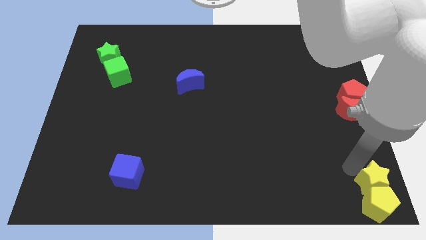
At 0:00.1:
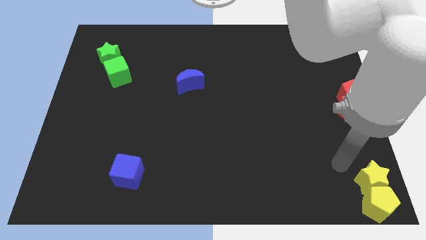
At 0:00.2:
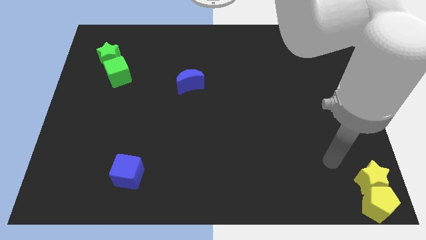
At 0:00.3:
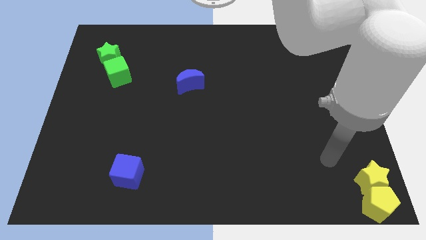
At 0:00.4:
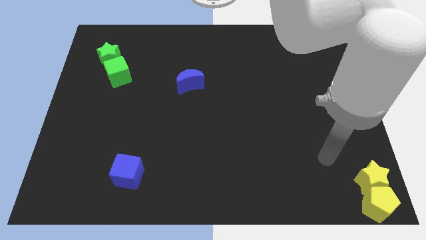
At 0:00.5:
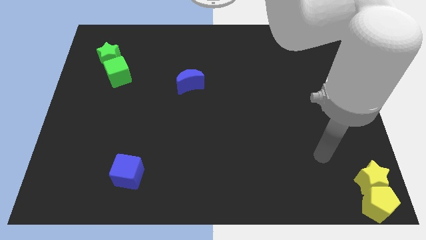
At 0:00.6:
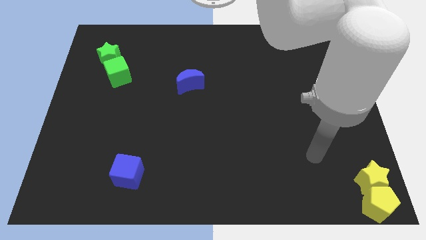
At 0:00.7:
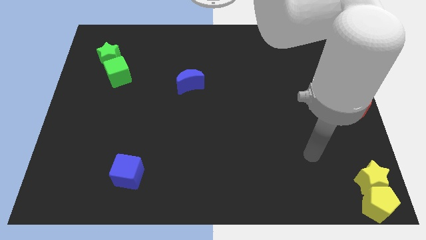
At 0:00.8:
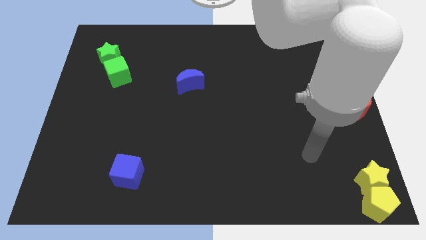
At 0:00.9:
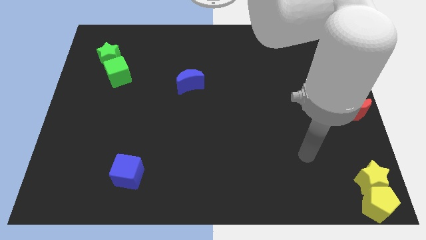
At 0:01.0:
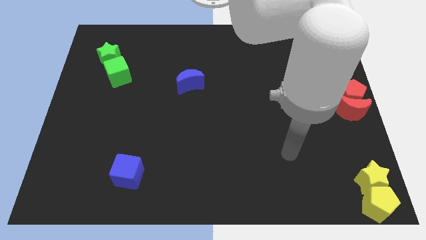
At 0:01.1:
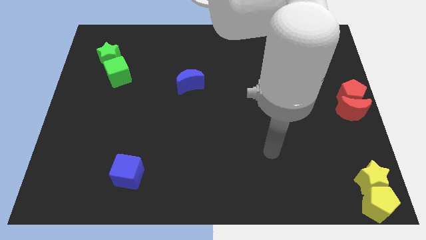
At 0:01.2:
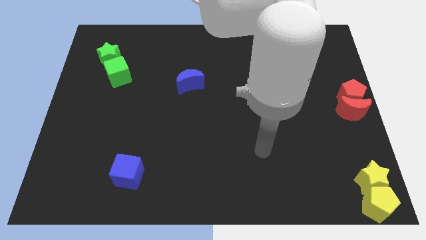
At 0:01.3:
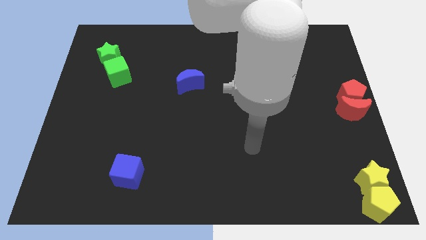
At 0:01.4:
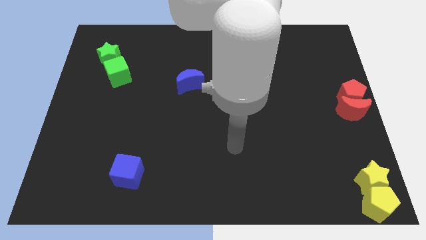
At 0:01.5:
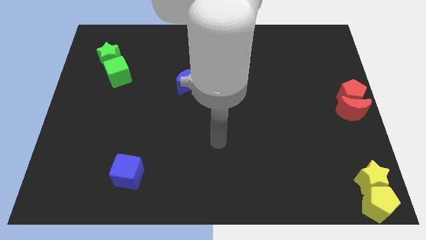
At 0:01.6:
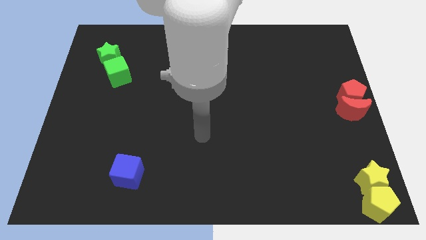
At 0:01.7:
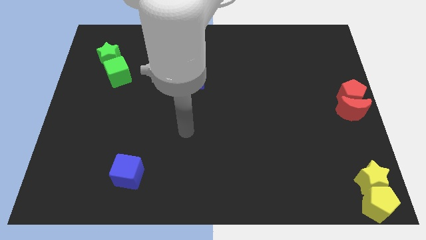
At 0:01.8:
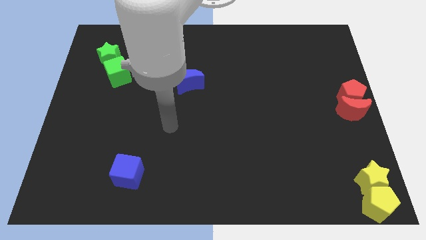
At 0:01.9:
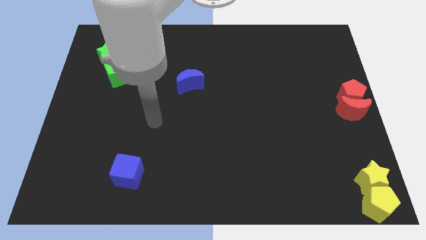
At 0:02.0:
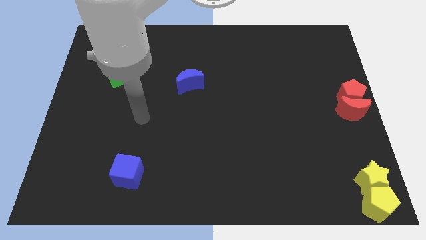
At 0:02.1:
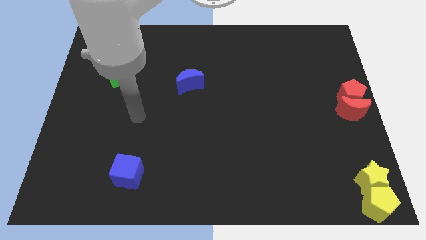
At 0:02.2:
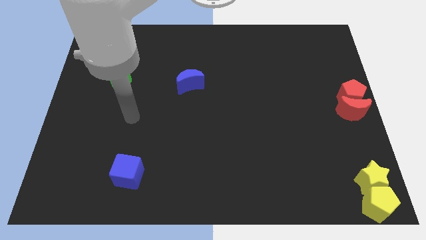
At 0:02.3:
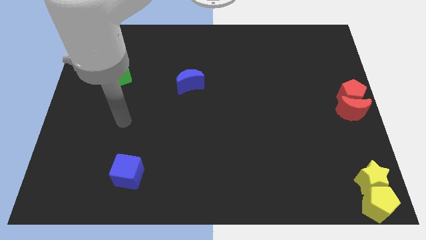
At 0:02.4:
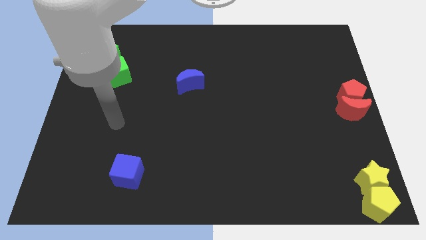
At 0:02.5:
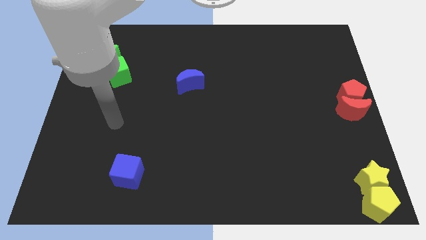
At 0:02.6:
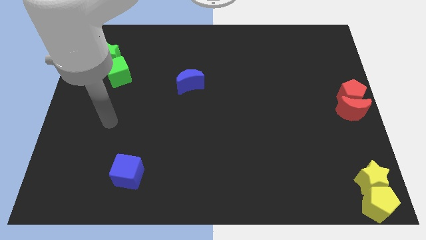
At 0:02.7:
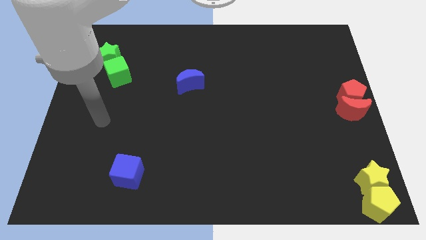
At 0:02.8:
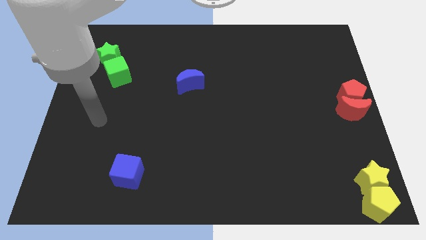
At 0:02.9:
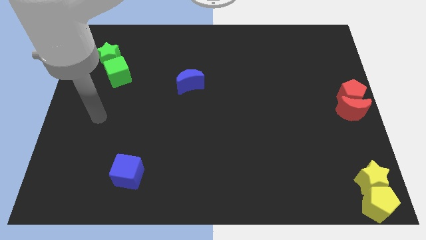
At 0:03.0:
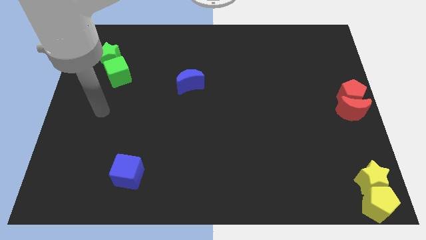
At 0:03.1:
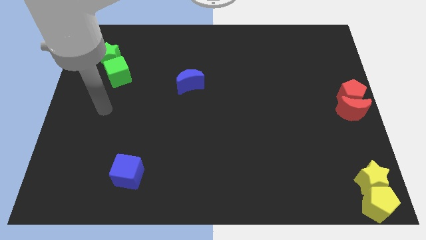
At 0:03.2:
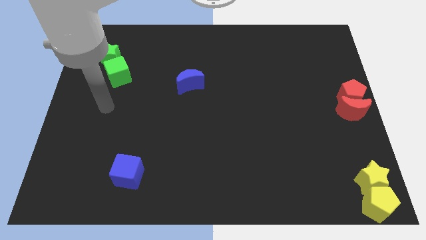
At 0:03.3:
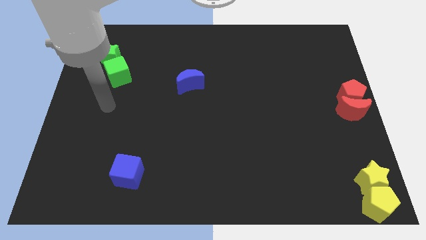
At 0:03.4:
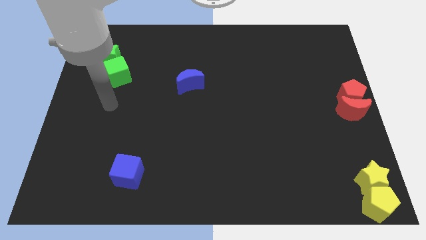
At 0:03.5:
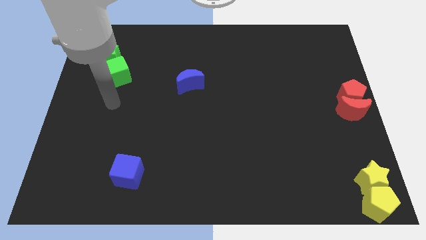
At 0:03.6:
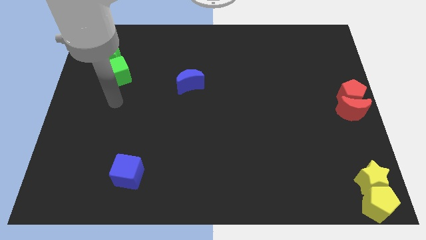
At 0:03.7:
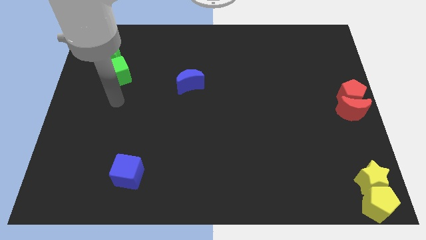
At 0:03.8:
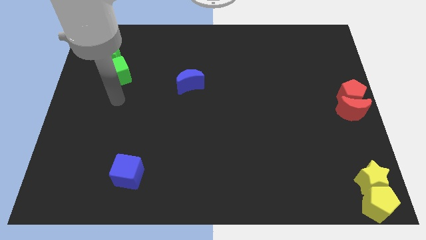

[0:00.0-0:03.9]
move the arm below to the green cube

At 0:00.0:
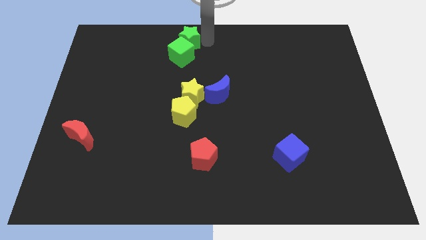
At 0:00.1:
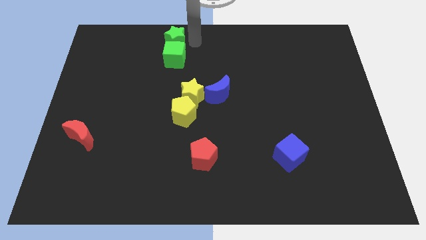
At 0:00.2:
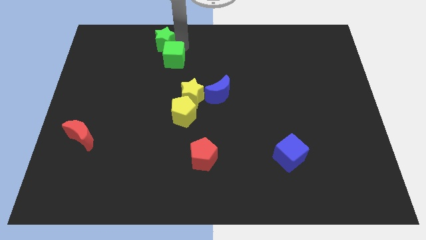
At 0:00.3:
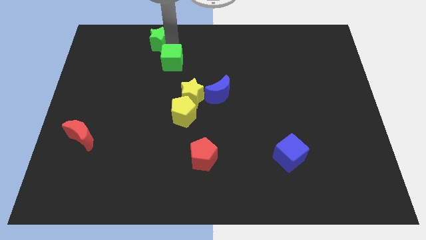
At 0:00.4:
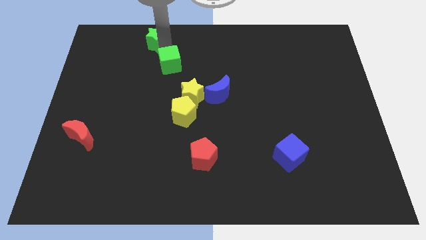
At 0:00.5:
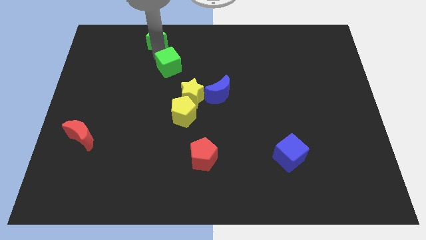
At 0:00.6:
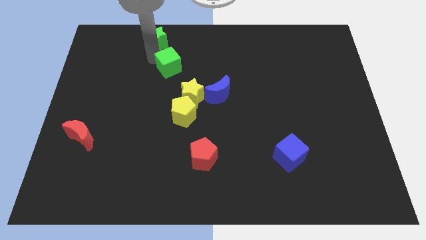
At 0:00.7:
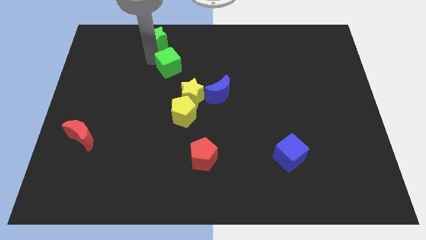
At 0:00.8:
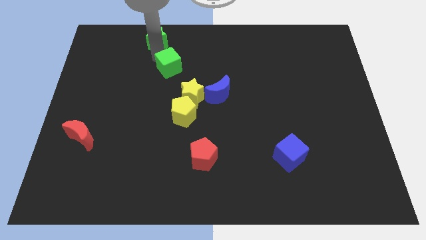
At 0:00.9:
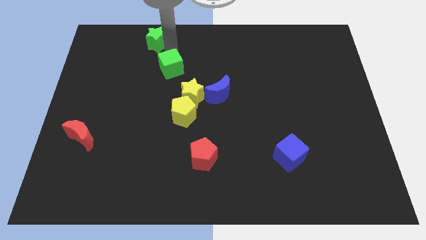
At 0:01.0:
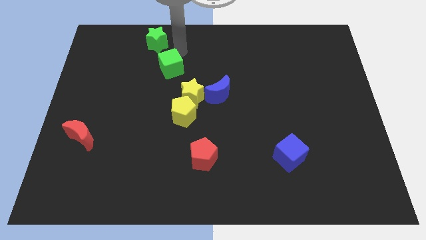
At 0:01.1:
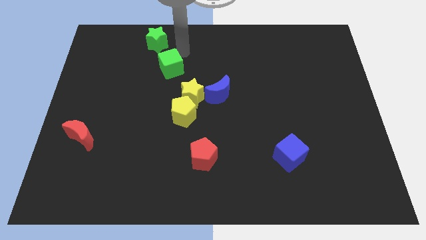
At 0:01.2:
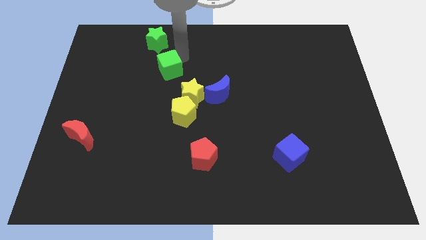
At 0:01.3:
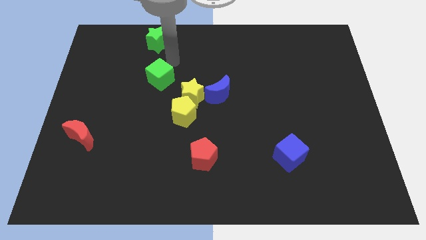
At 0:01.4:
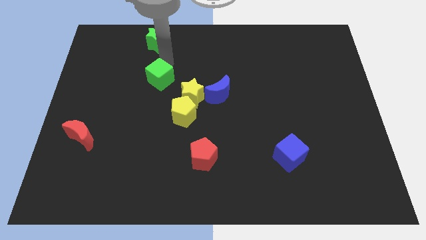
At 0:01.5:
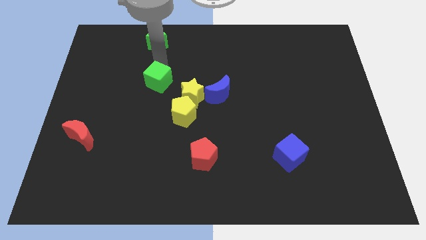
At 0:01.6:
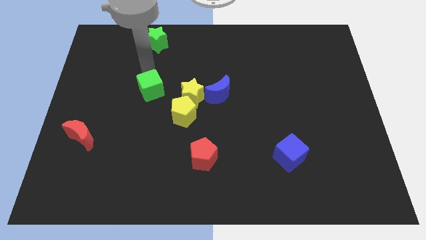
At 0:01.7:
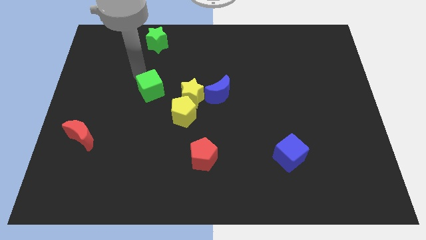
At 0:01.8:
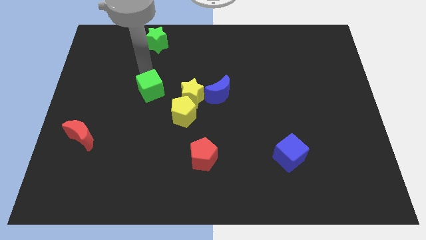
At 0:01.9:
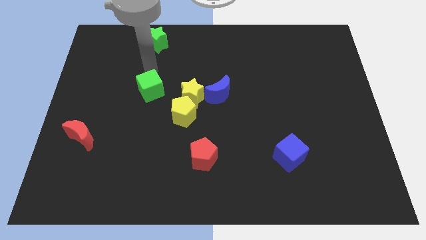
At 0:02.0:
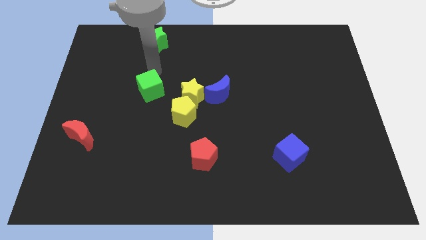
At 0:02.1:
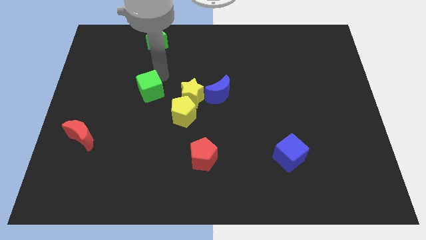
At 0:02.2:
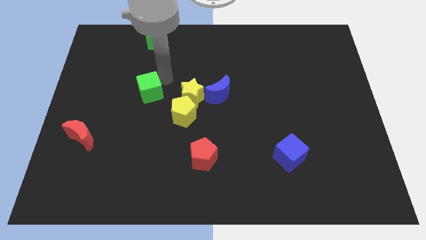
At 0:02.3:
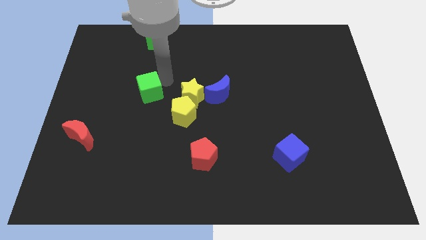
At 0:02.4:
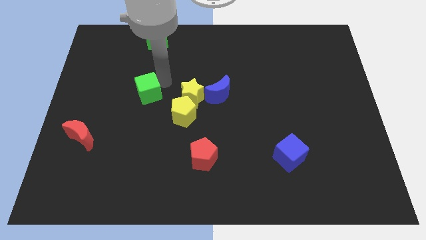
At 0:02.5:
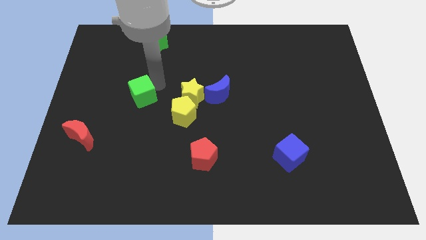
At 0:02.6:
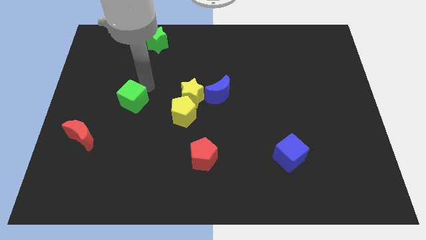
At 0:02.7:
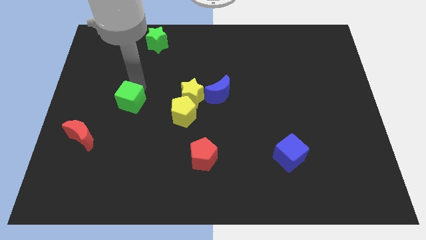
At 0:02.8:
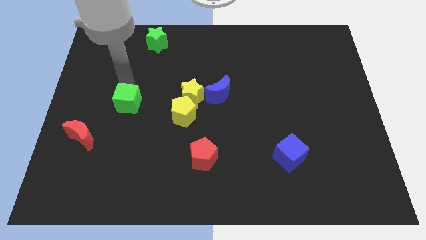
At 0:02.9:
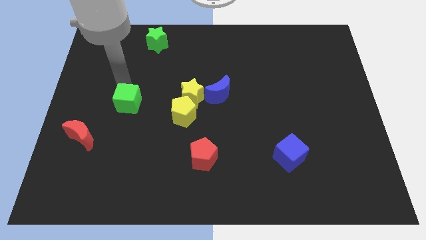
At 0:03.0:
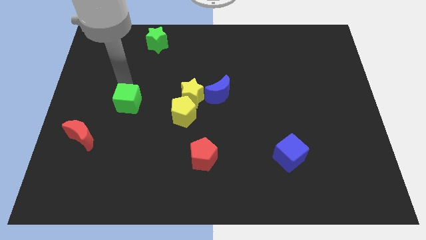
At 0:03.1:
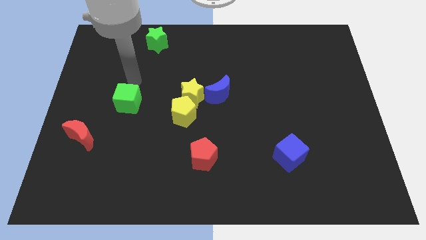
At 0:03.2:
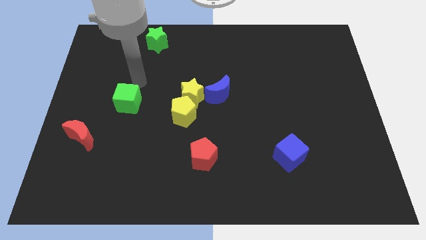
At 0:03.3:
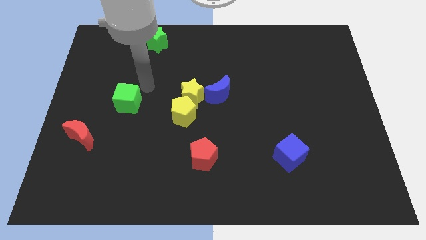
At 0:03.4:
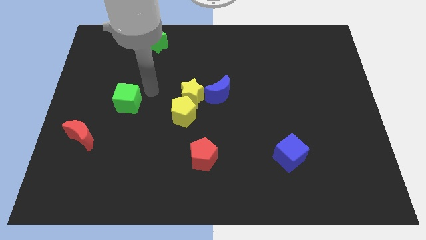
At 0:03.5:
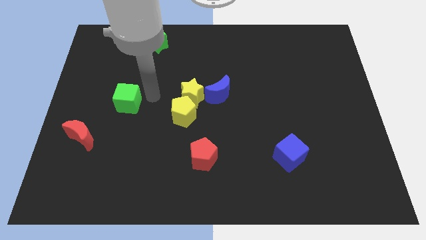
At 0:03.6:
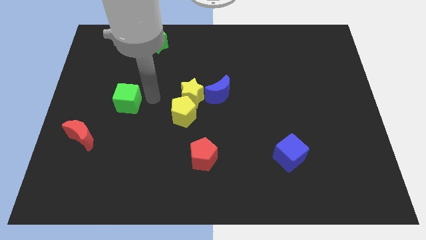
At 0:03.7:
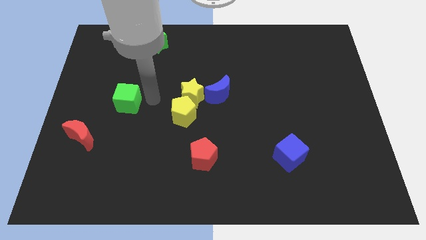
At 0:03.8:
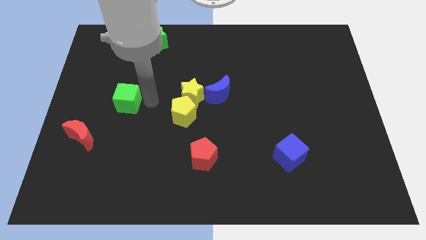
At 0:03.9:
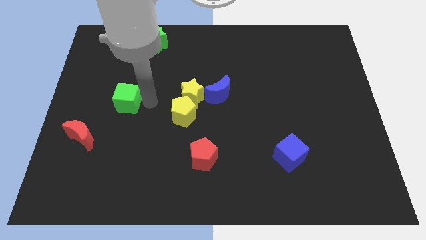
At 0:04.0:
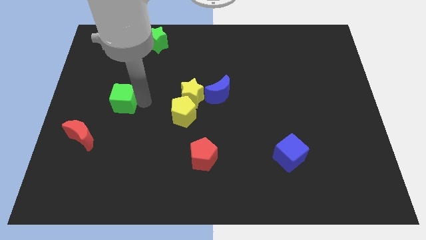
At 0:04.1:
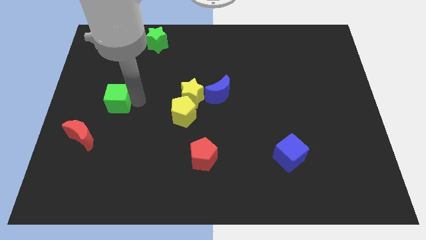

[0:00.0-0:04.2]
separate the green star and green cube

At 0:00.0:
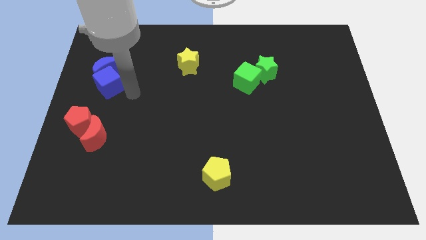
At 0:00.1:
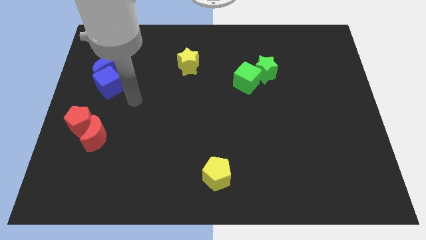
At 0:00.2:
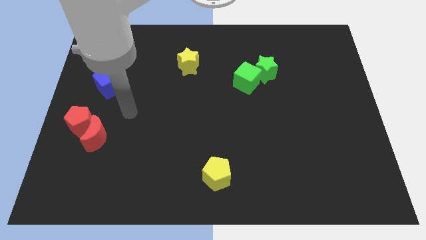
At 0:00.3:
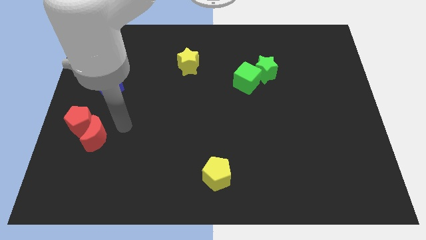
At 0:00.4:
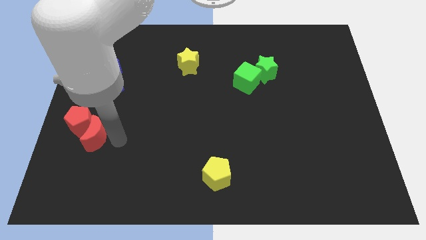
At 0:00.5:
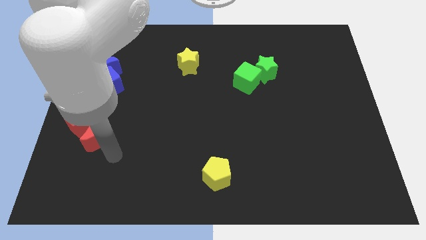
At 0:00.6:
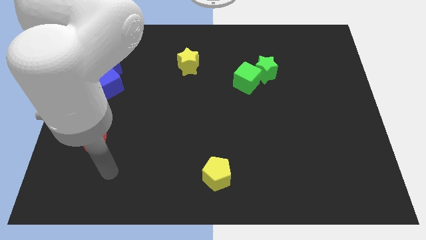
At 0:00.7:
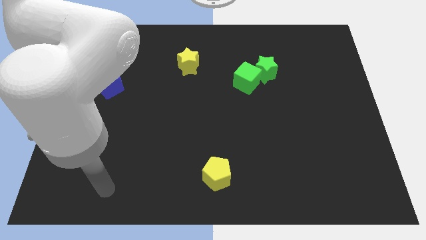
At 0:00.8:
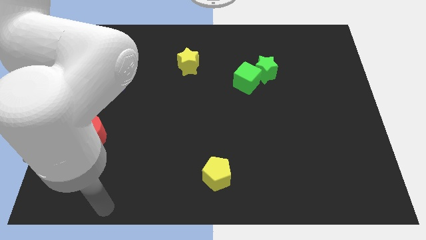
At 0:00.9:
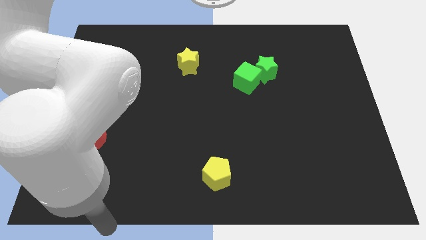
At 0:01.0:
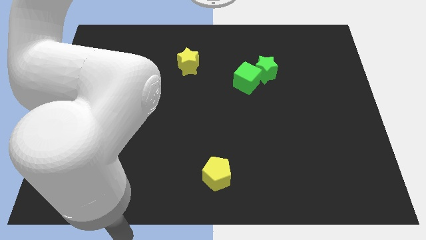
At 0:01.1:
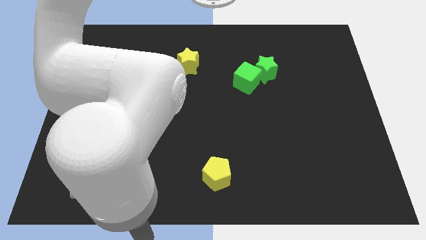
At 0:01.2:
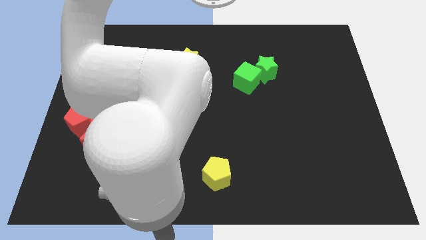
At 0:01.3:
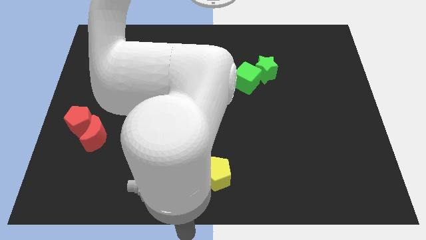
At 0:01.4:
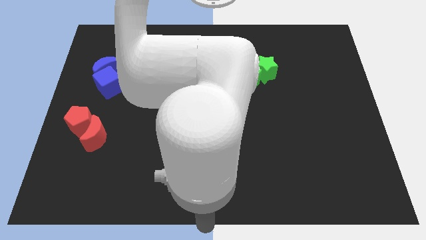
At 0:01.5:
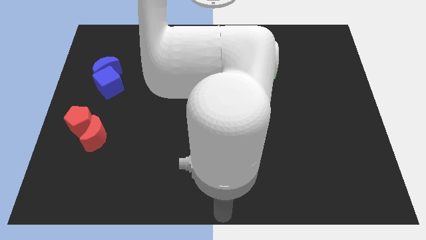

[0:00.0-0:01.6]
put your arm at the bottom center of the board
